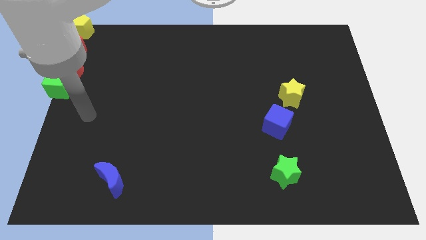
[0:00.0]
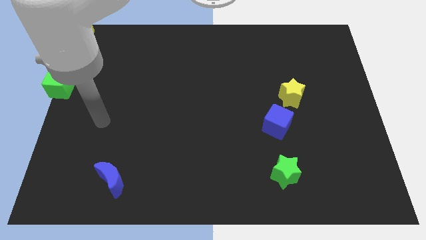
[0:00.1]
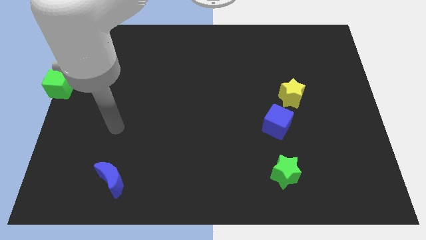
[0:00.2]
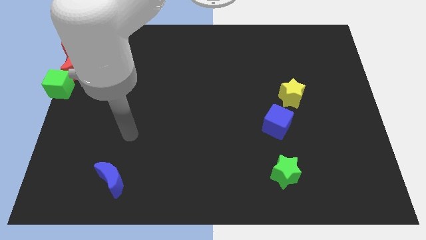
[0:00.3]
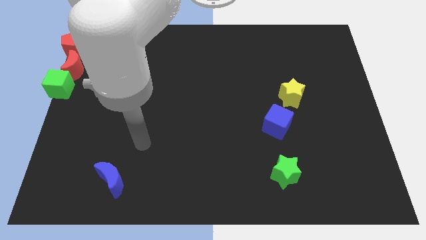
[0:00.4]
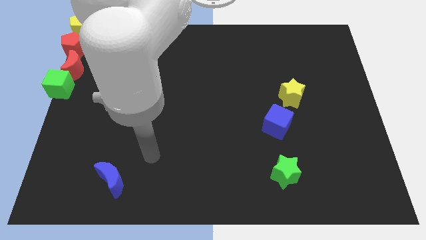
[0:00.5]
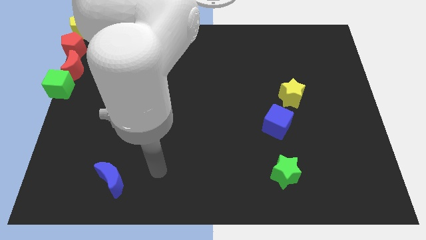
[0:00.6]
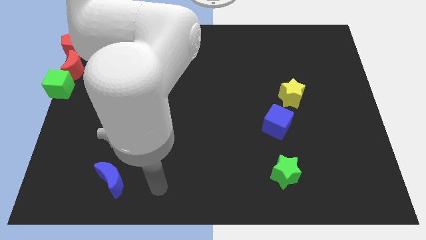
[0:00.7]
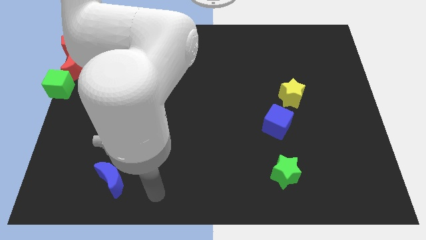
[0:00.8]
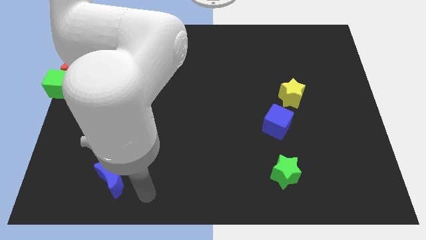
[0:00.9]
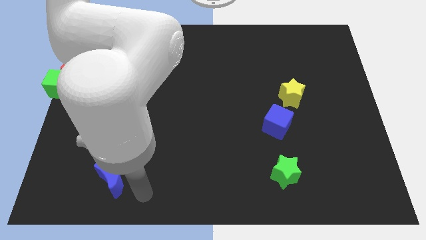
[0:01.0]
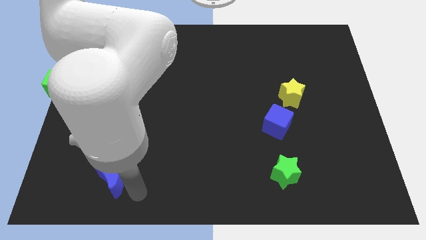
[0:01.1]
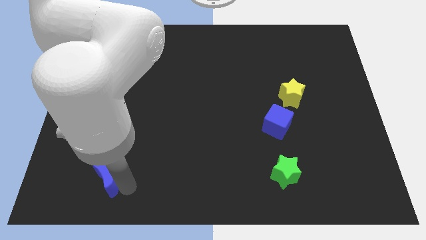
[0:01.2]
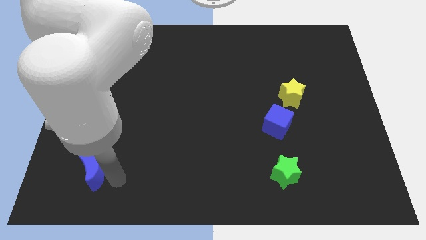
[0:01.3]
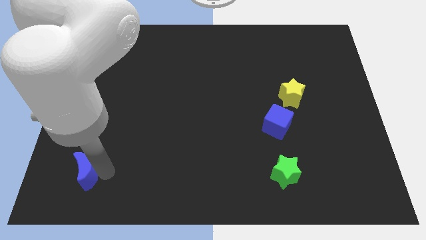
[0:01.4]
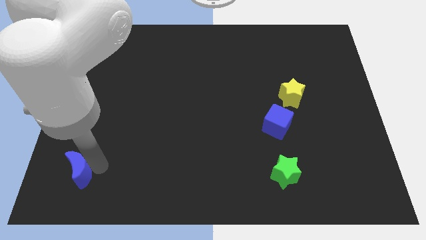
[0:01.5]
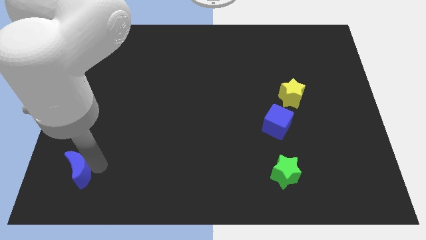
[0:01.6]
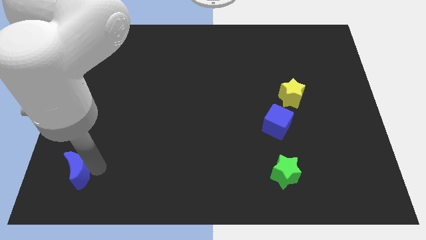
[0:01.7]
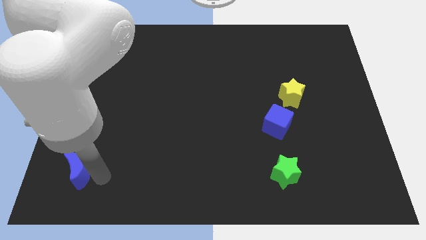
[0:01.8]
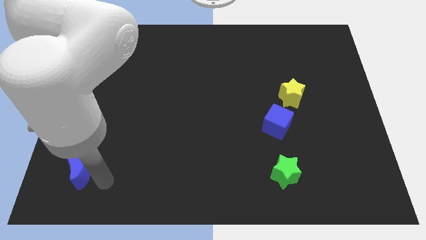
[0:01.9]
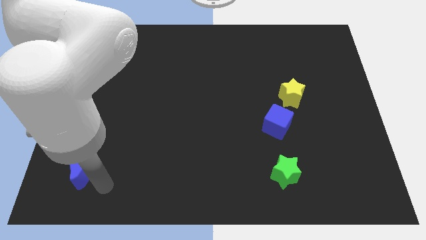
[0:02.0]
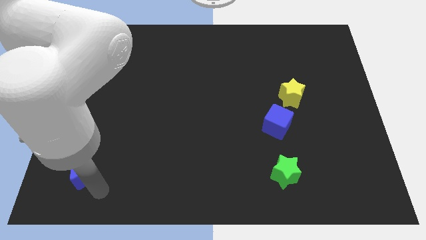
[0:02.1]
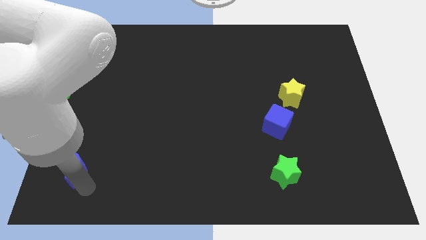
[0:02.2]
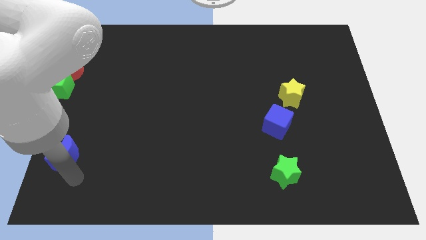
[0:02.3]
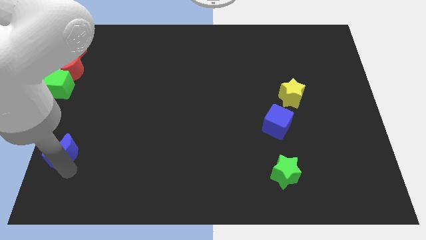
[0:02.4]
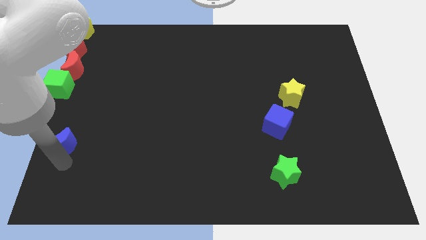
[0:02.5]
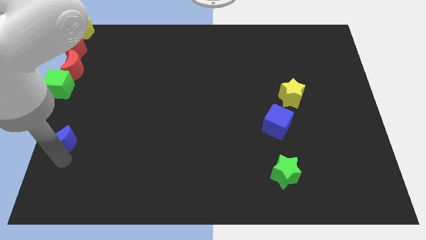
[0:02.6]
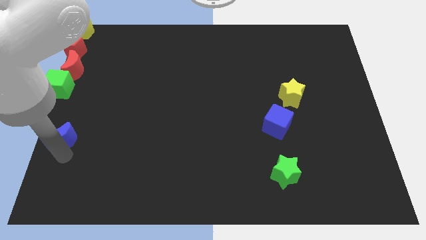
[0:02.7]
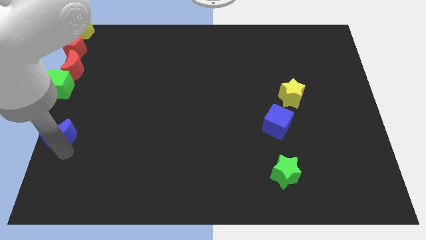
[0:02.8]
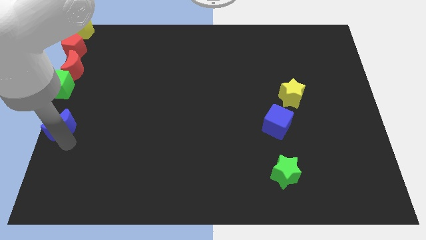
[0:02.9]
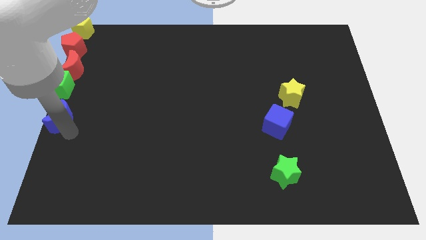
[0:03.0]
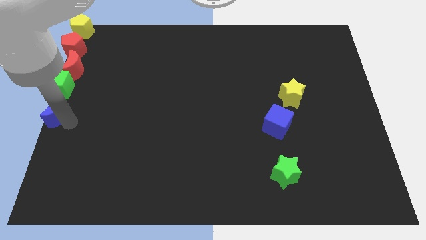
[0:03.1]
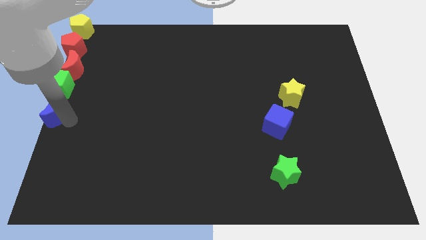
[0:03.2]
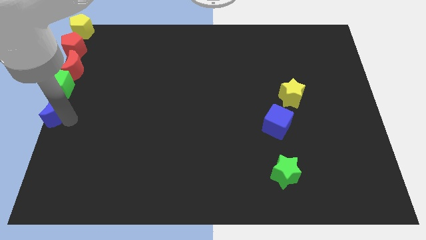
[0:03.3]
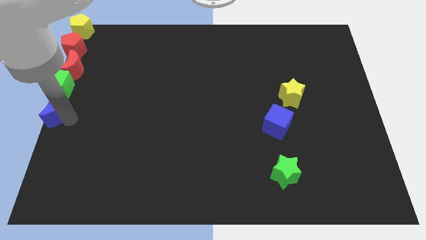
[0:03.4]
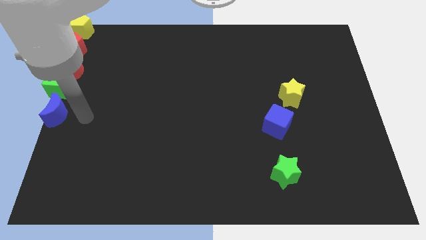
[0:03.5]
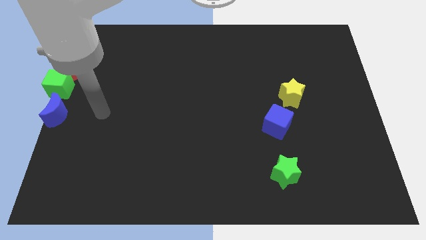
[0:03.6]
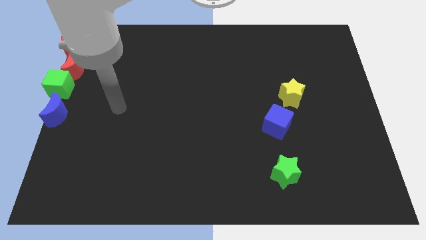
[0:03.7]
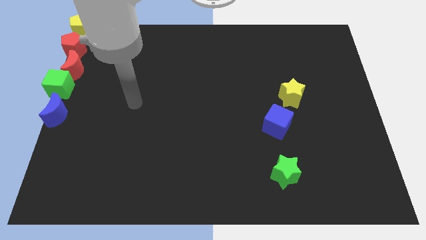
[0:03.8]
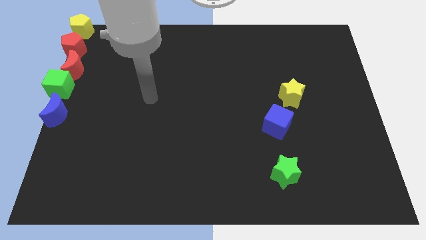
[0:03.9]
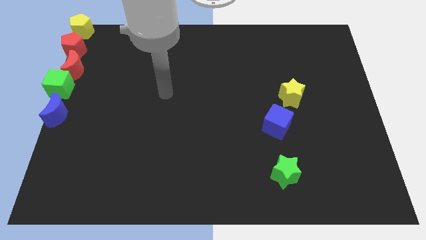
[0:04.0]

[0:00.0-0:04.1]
push the blue crescent to the bottom of the green cube

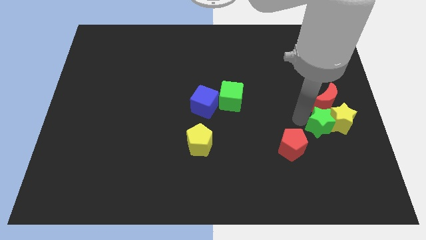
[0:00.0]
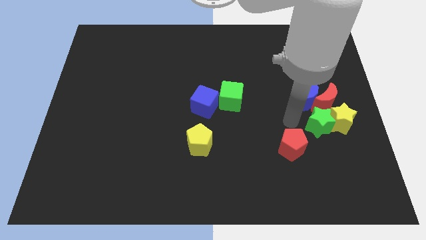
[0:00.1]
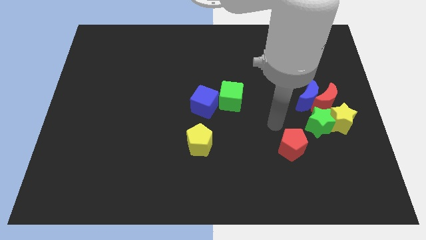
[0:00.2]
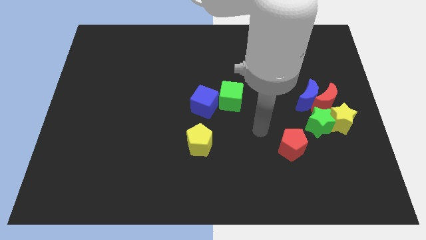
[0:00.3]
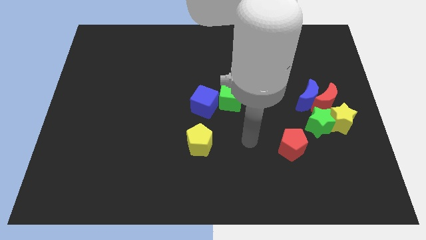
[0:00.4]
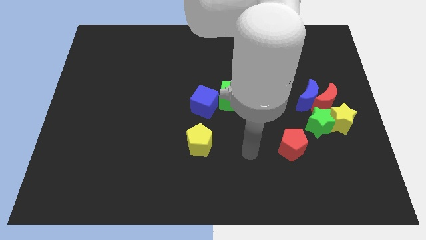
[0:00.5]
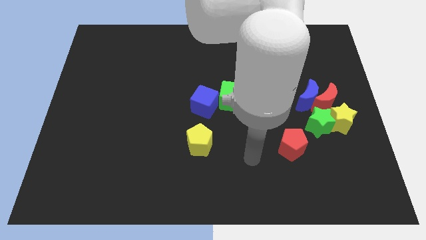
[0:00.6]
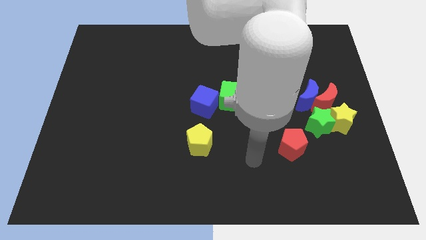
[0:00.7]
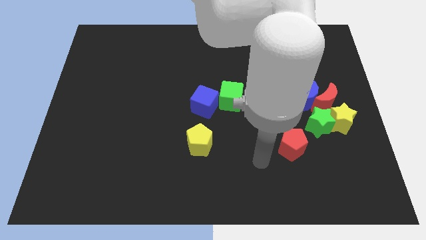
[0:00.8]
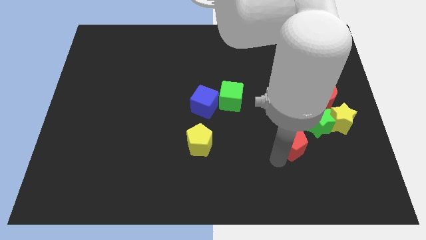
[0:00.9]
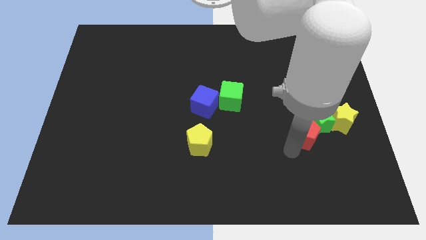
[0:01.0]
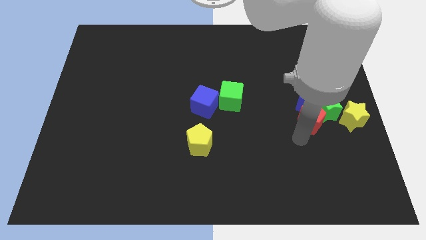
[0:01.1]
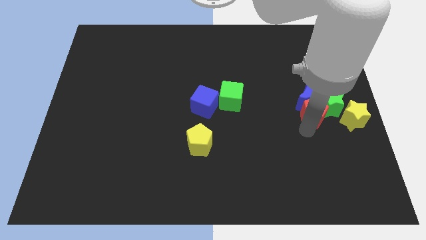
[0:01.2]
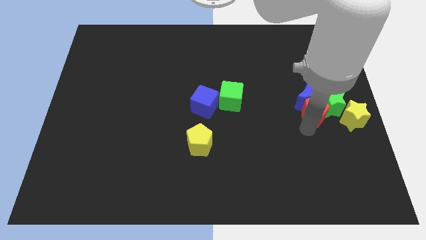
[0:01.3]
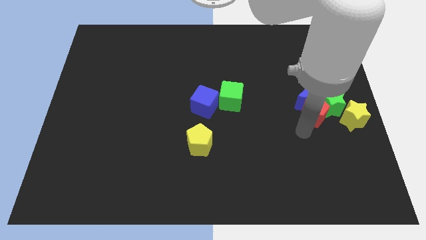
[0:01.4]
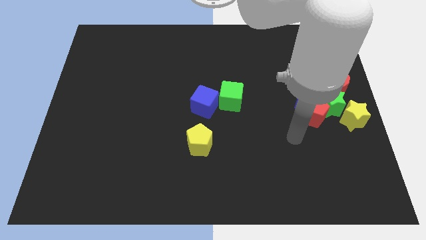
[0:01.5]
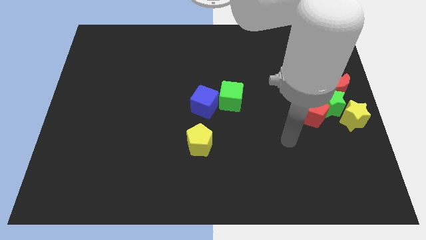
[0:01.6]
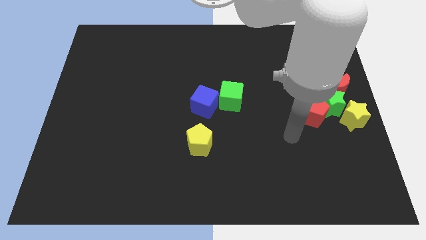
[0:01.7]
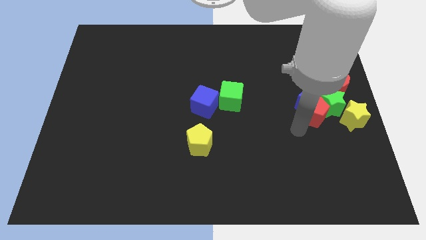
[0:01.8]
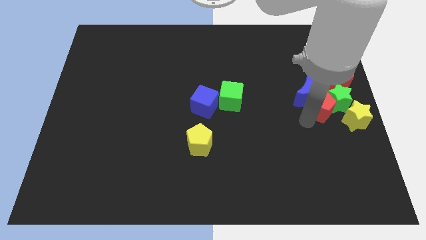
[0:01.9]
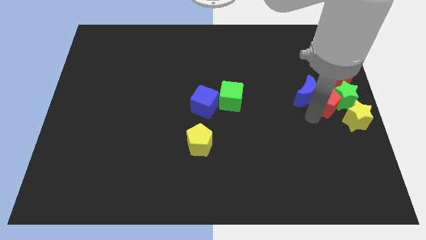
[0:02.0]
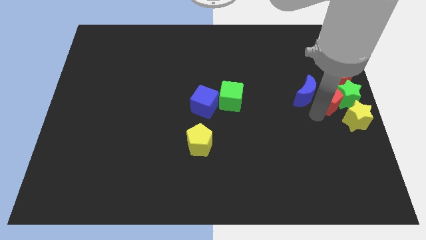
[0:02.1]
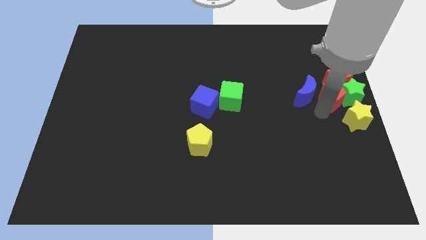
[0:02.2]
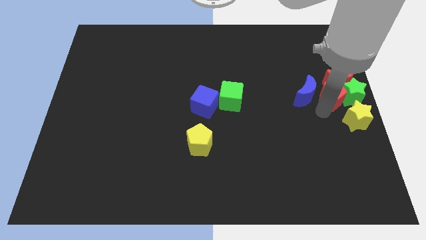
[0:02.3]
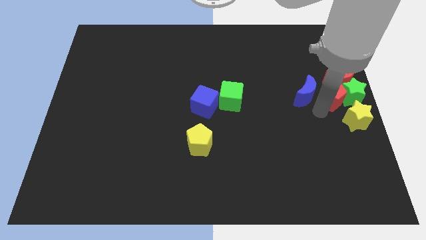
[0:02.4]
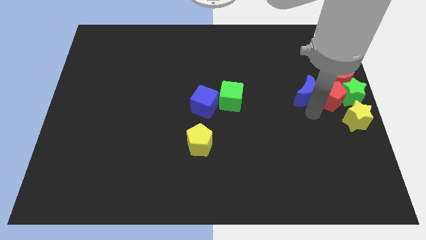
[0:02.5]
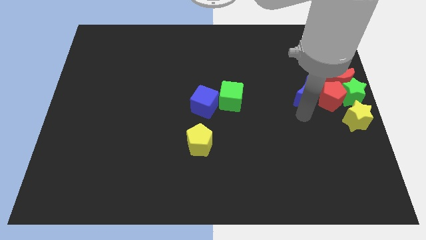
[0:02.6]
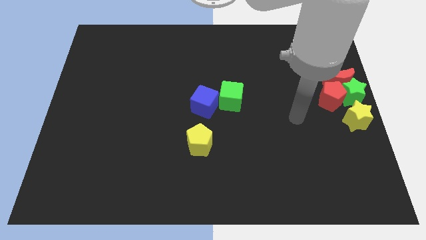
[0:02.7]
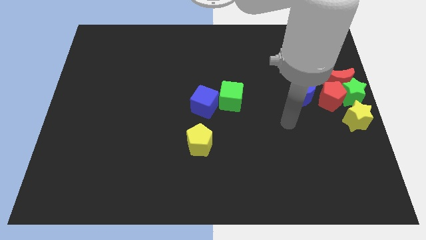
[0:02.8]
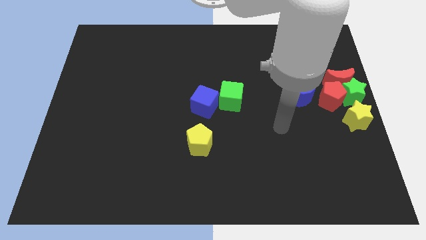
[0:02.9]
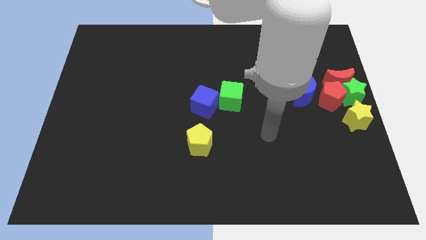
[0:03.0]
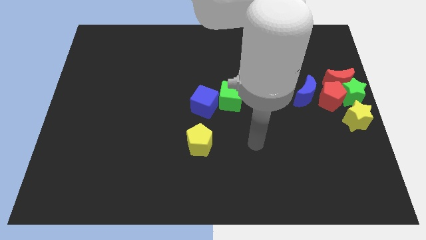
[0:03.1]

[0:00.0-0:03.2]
arrange the green star and the red pentagon at the center right of the board

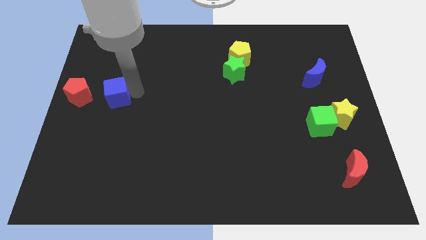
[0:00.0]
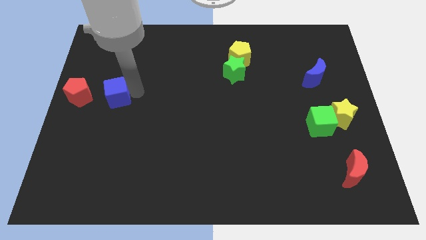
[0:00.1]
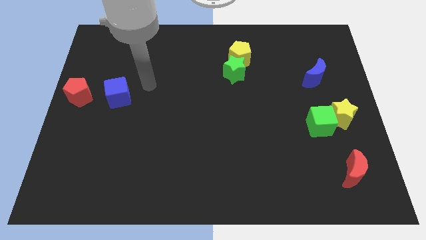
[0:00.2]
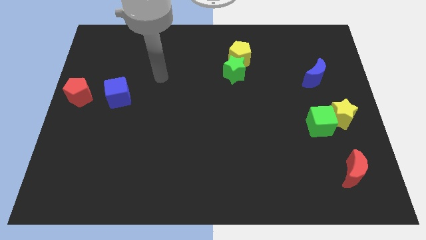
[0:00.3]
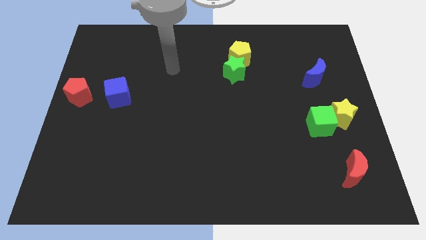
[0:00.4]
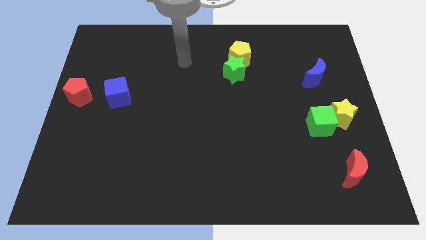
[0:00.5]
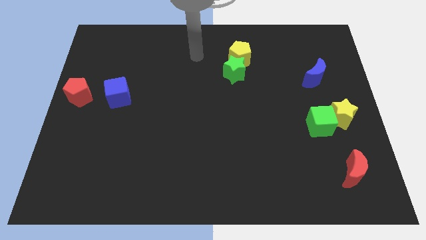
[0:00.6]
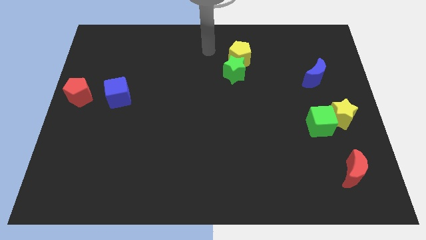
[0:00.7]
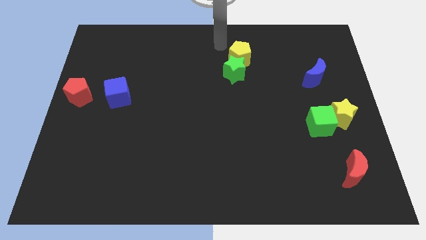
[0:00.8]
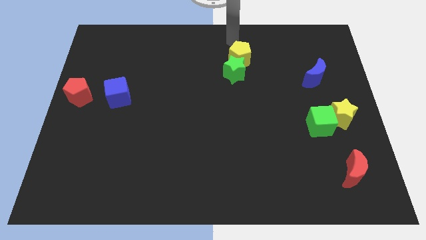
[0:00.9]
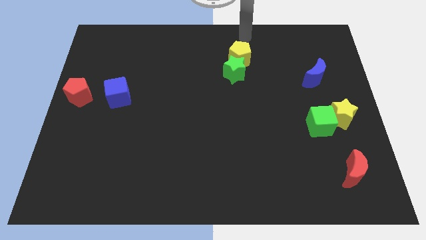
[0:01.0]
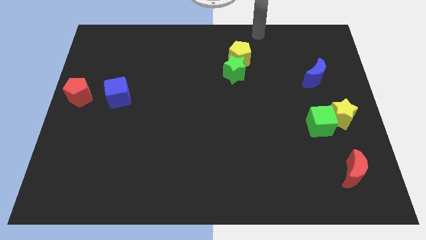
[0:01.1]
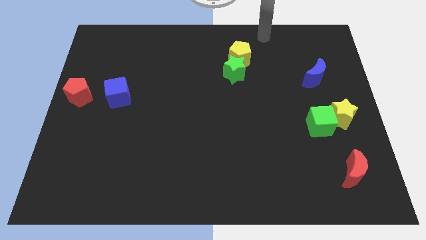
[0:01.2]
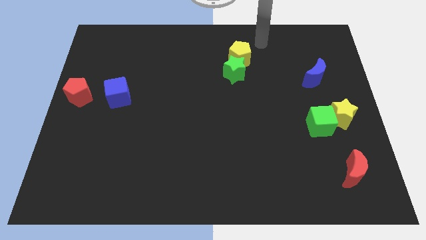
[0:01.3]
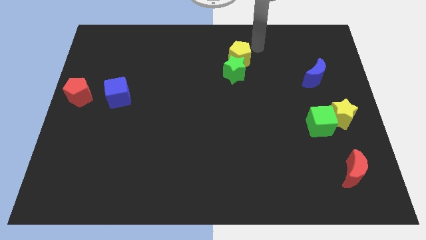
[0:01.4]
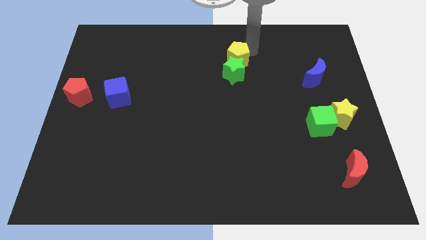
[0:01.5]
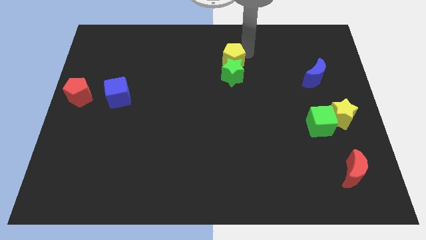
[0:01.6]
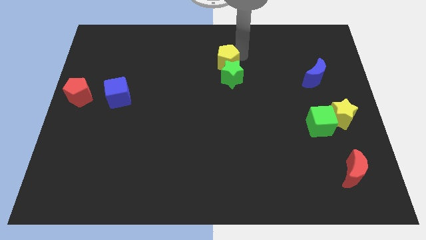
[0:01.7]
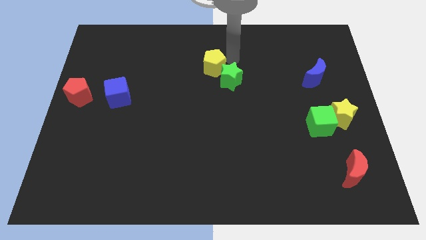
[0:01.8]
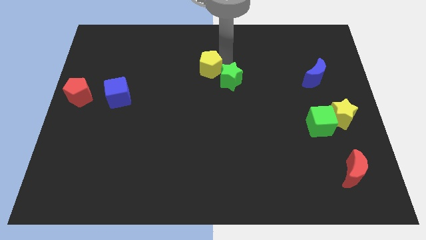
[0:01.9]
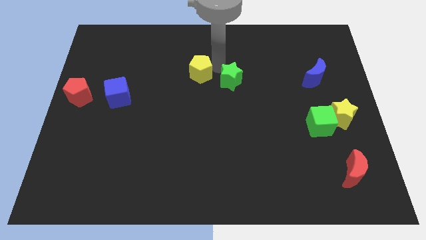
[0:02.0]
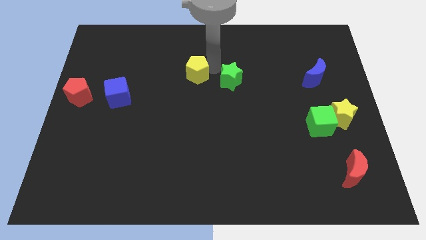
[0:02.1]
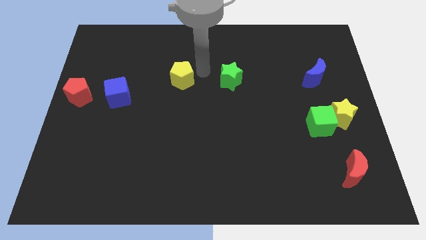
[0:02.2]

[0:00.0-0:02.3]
place yellow pentagon to the left of green star
